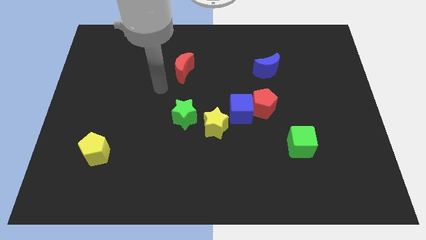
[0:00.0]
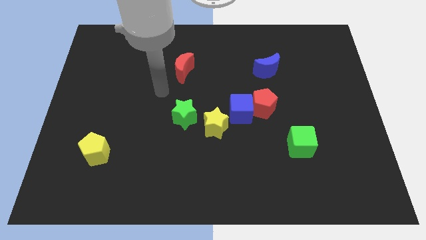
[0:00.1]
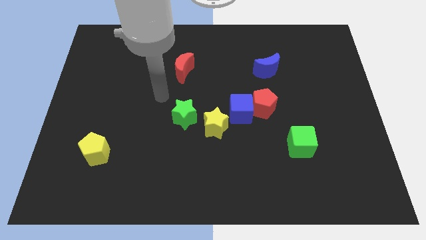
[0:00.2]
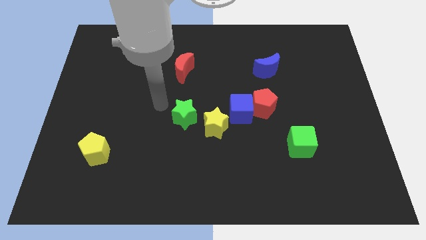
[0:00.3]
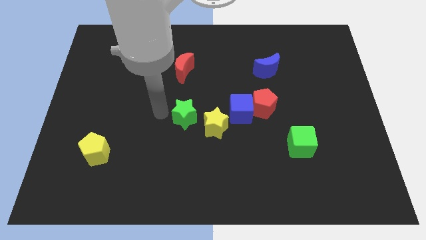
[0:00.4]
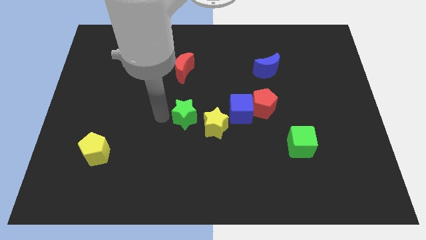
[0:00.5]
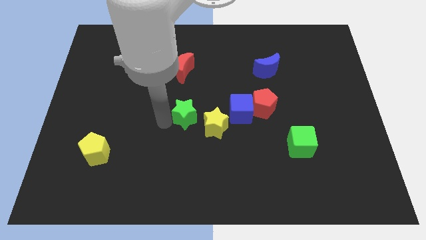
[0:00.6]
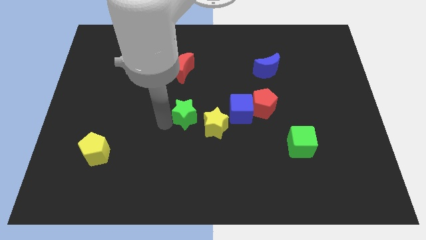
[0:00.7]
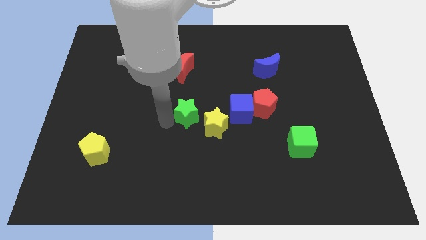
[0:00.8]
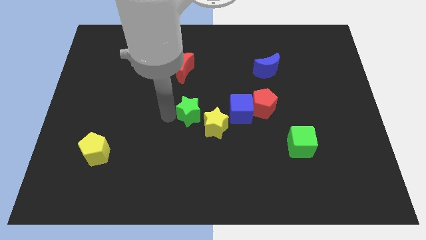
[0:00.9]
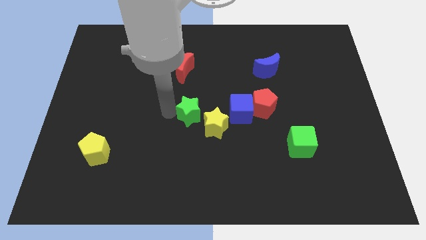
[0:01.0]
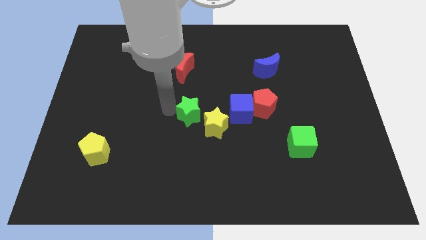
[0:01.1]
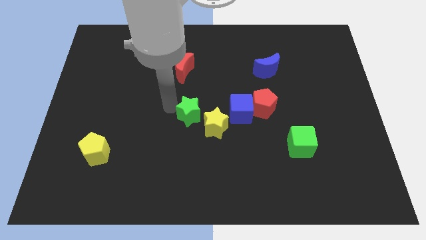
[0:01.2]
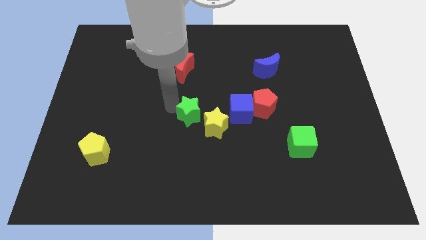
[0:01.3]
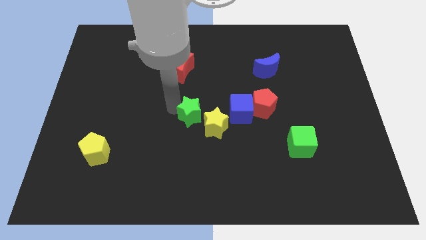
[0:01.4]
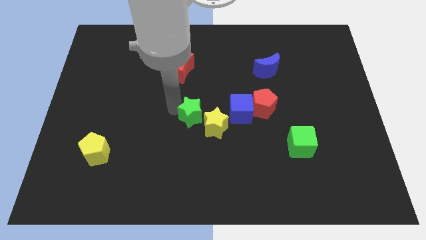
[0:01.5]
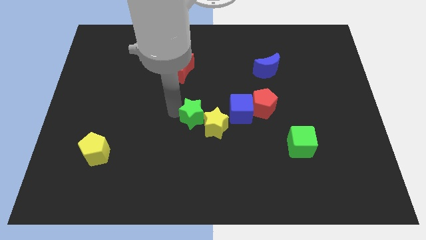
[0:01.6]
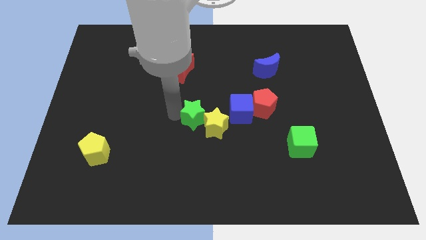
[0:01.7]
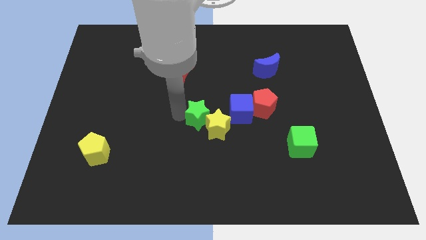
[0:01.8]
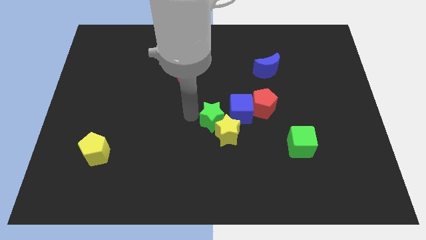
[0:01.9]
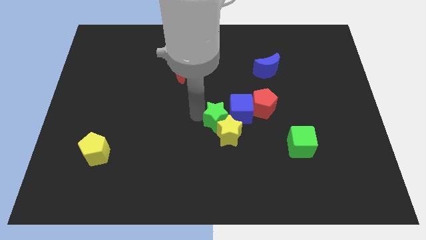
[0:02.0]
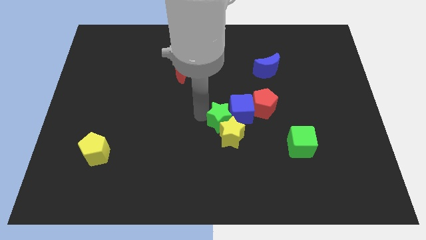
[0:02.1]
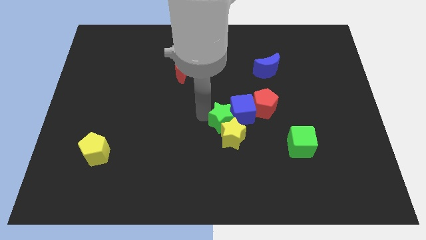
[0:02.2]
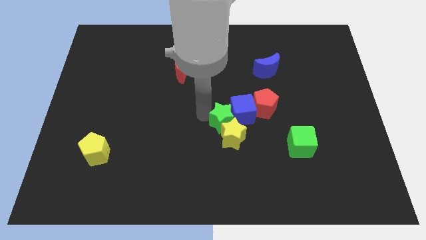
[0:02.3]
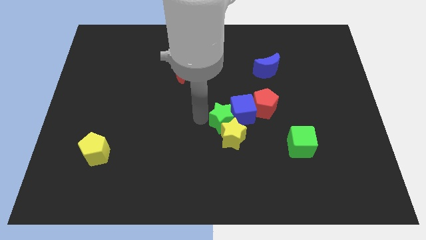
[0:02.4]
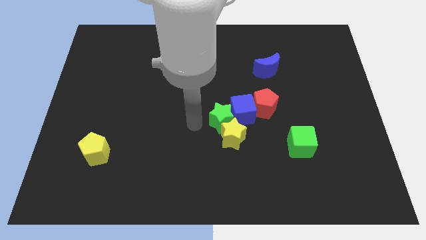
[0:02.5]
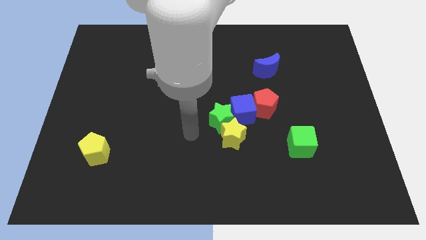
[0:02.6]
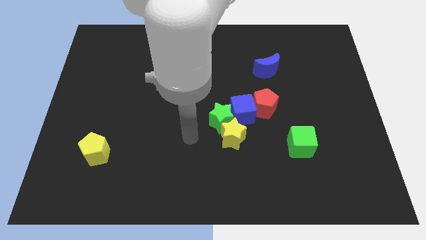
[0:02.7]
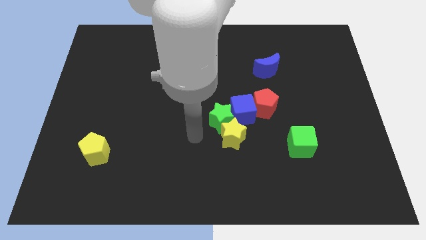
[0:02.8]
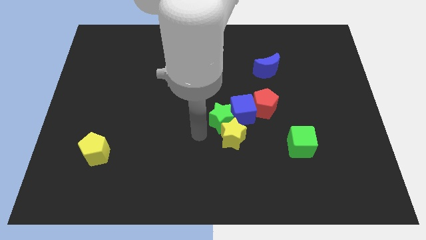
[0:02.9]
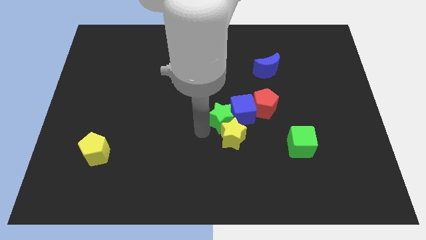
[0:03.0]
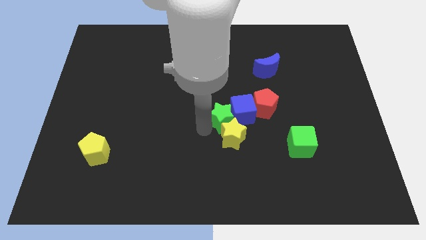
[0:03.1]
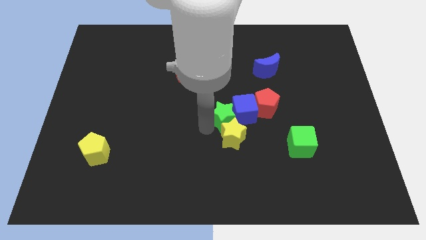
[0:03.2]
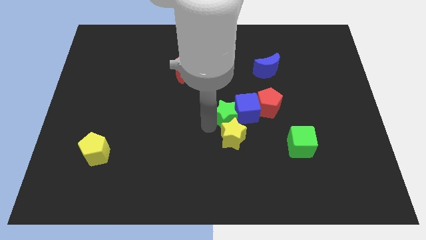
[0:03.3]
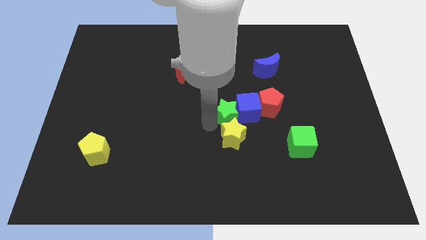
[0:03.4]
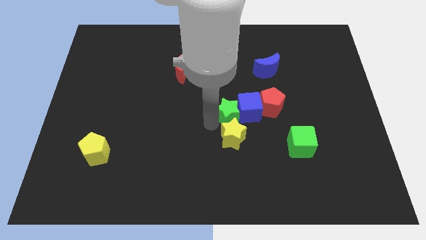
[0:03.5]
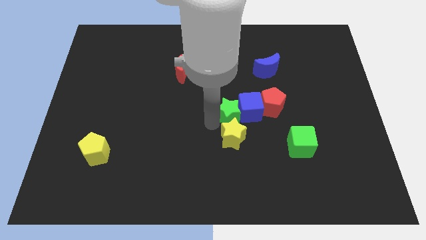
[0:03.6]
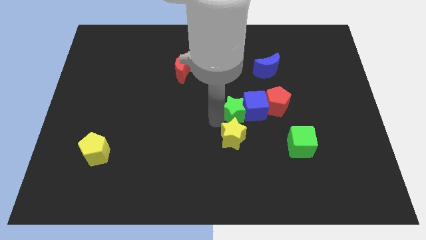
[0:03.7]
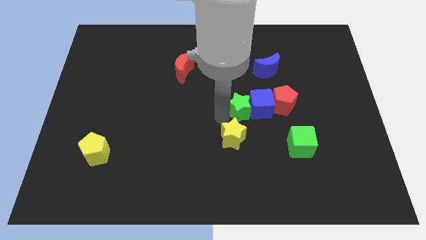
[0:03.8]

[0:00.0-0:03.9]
place green star to the top of yellow star

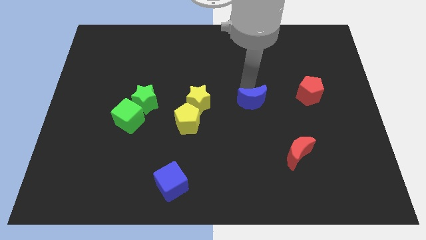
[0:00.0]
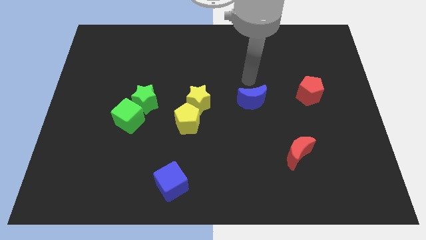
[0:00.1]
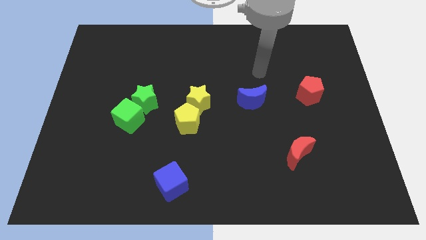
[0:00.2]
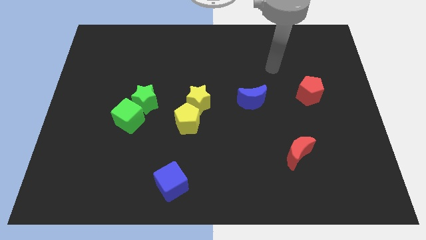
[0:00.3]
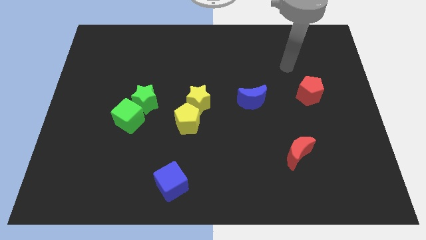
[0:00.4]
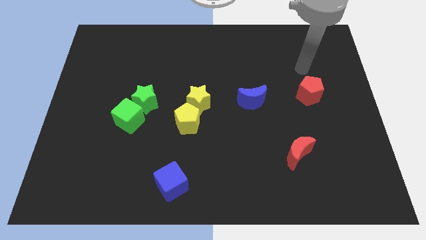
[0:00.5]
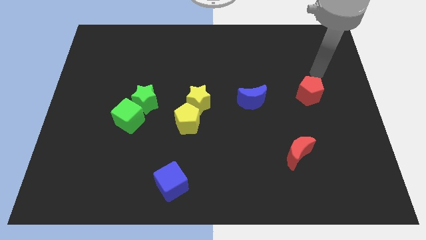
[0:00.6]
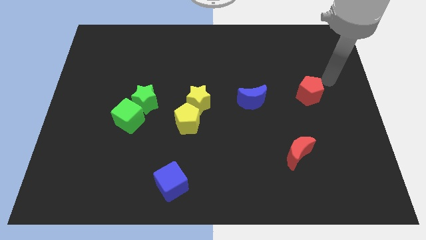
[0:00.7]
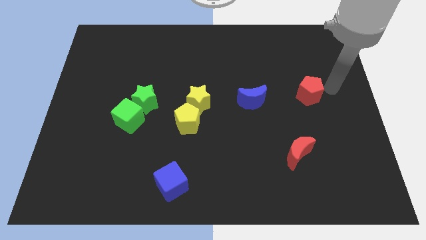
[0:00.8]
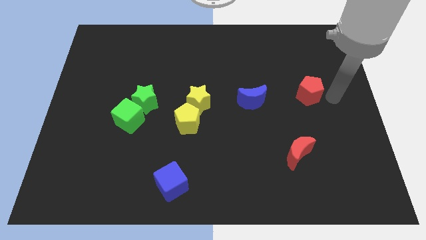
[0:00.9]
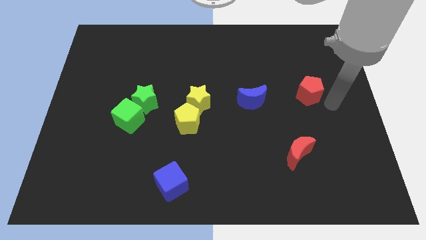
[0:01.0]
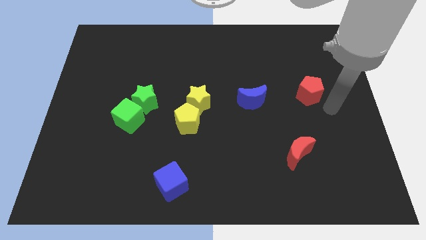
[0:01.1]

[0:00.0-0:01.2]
move your arm towards red pentagon

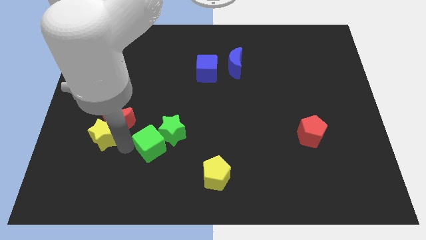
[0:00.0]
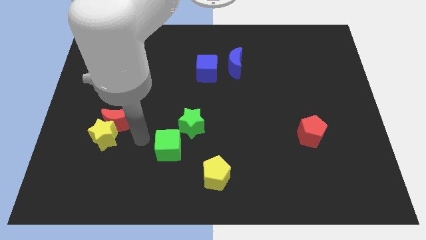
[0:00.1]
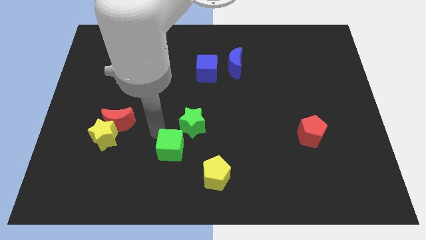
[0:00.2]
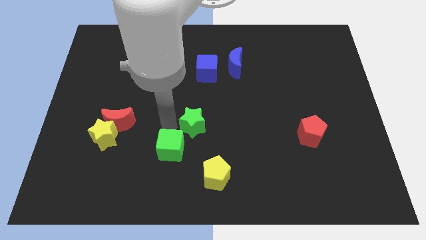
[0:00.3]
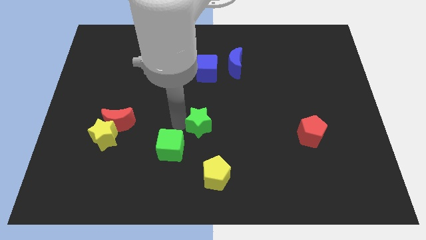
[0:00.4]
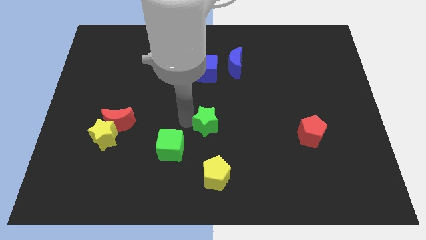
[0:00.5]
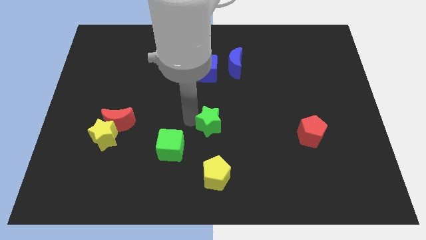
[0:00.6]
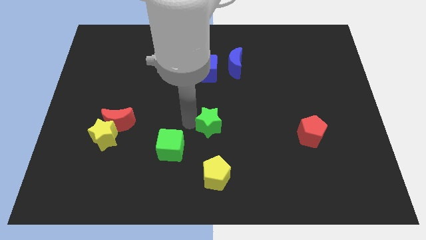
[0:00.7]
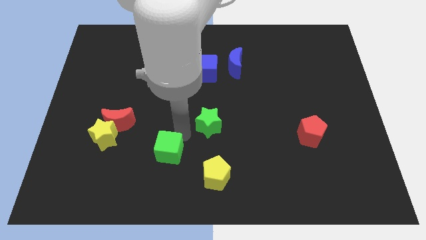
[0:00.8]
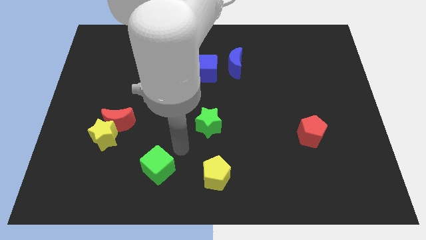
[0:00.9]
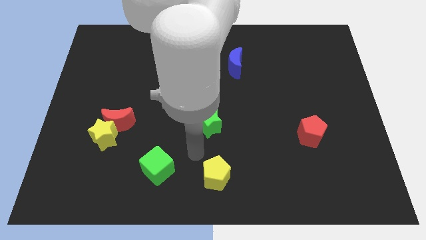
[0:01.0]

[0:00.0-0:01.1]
separate both the green blocks from each other

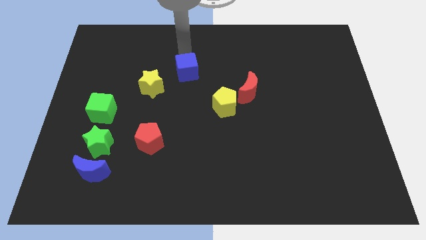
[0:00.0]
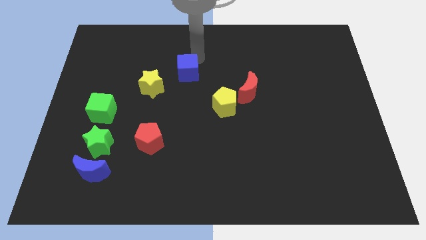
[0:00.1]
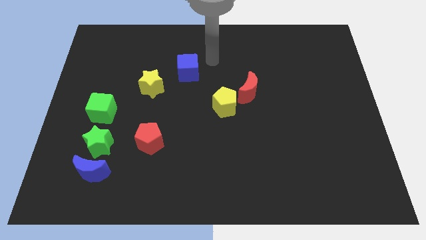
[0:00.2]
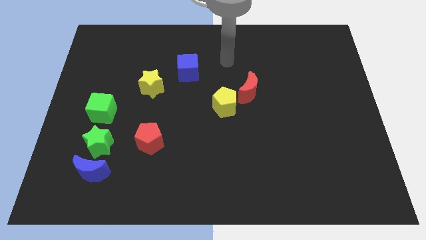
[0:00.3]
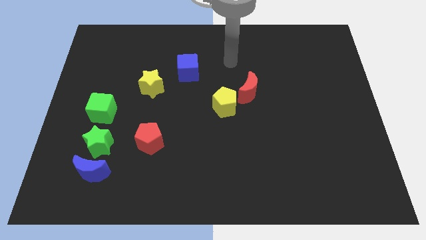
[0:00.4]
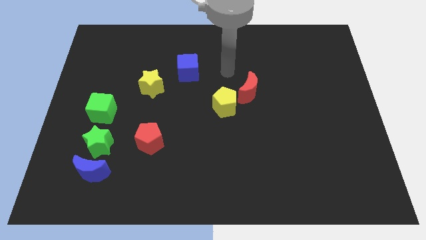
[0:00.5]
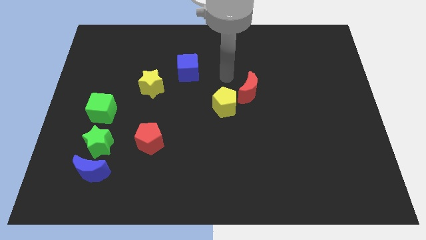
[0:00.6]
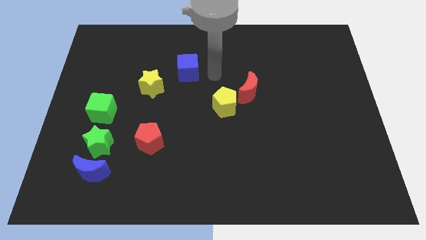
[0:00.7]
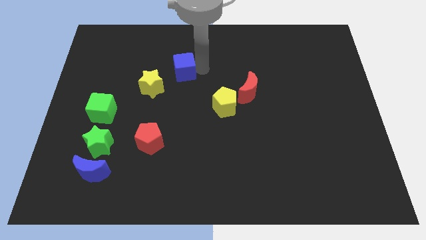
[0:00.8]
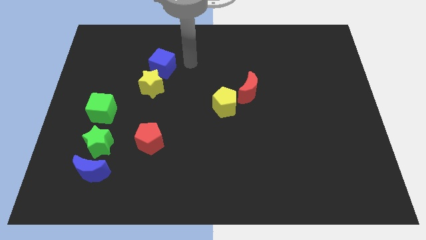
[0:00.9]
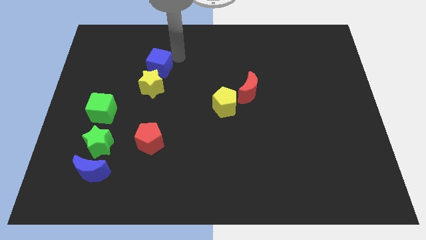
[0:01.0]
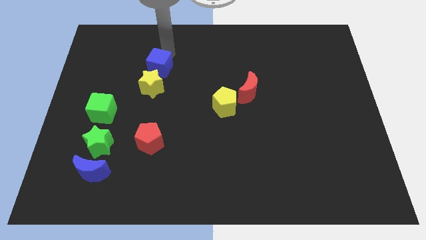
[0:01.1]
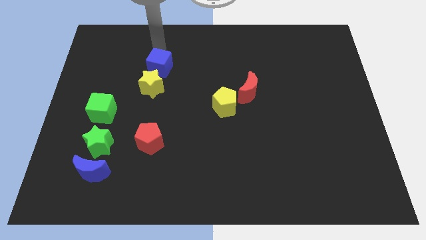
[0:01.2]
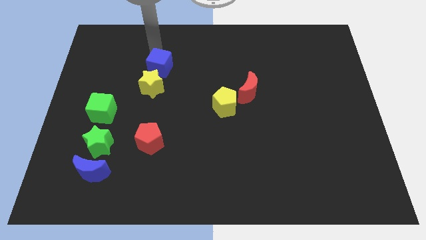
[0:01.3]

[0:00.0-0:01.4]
place the blue cube above yellow star

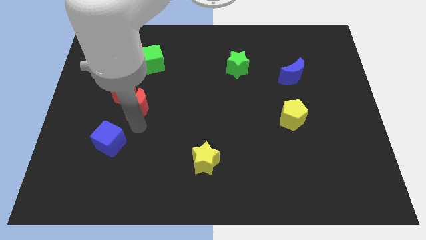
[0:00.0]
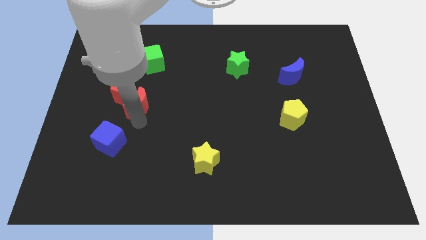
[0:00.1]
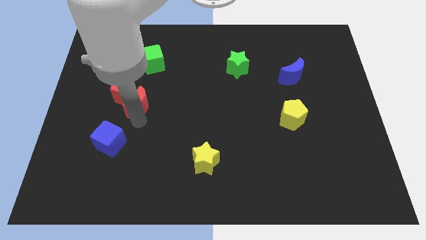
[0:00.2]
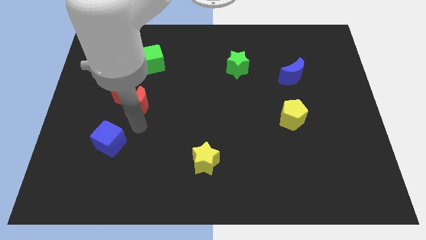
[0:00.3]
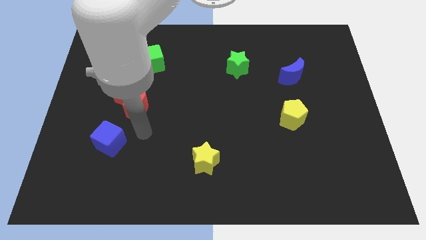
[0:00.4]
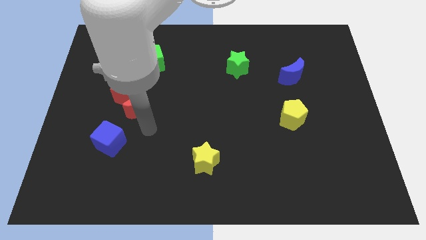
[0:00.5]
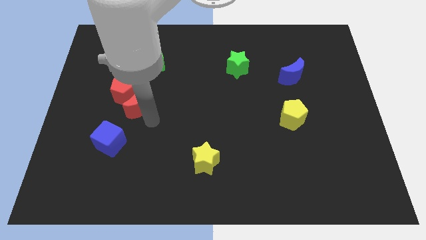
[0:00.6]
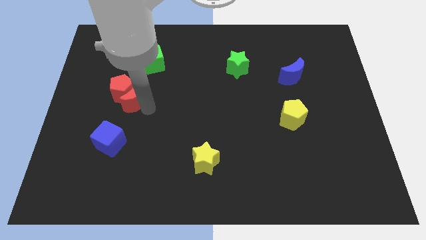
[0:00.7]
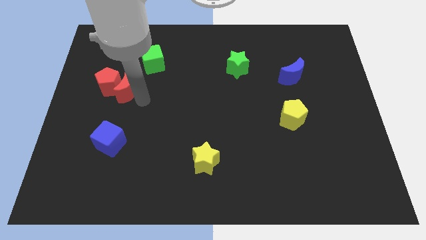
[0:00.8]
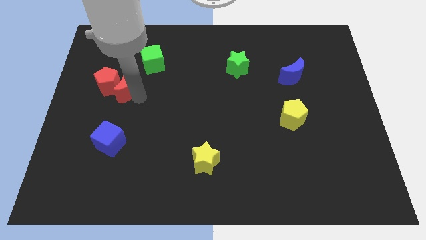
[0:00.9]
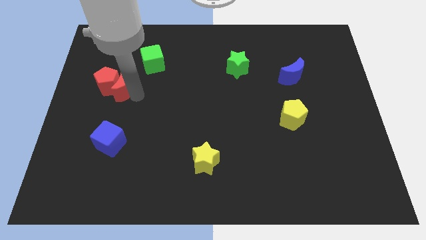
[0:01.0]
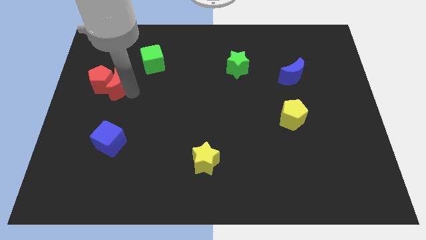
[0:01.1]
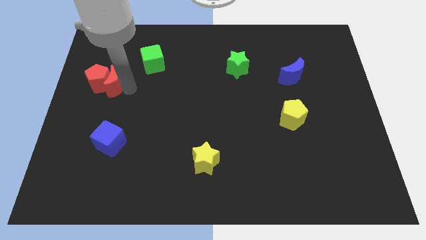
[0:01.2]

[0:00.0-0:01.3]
push red moon into red pentagon

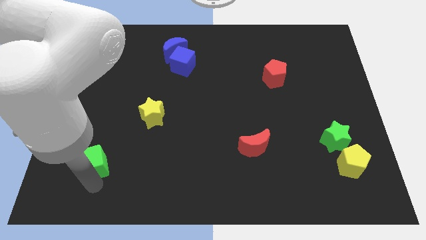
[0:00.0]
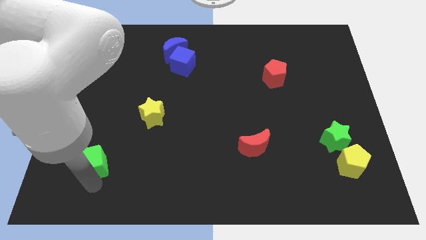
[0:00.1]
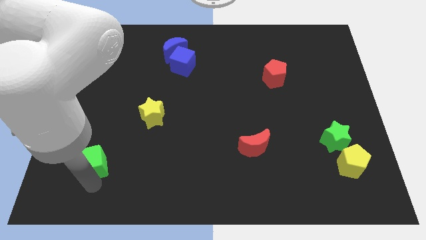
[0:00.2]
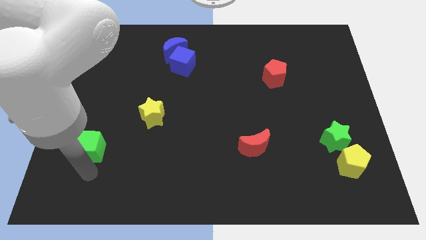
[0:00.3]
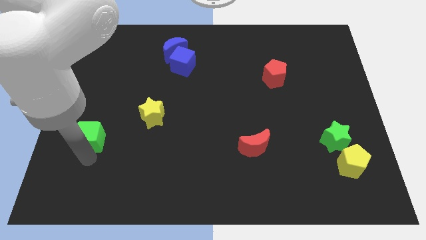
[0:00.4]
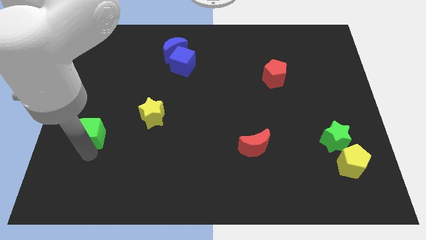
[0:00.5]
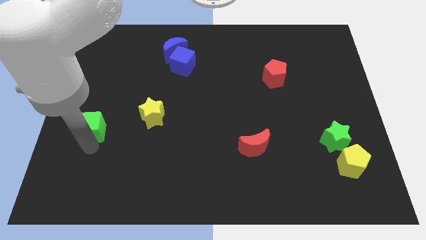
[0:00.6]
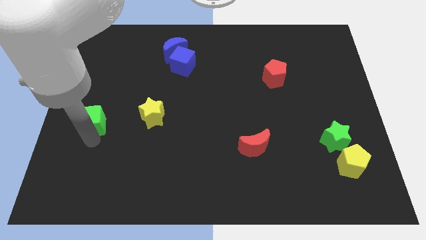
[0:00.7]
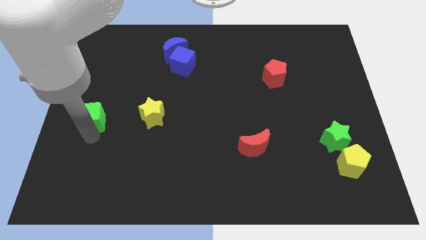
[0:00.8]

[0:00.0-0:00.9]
move the green cube to the left side of the yellow star
